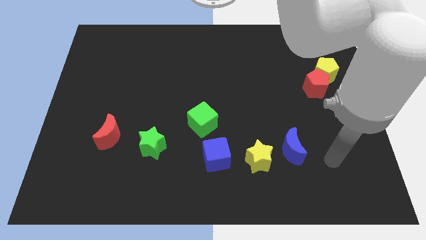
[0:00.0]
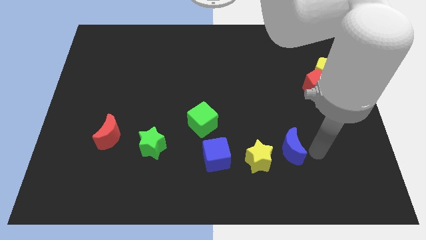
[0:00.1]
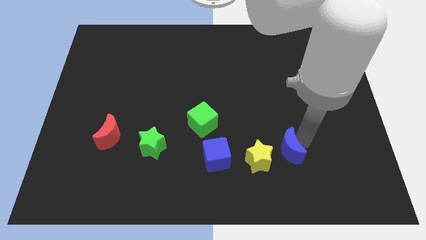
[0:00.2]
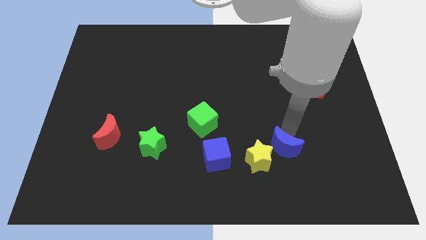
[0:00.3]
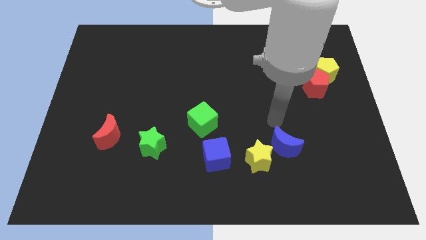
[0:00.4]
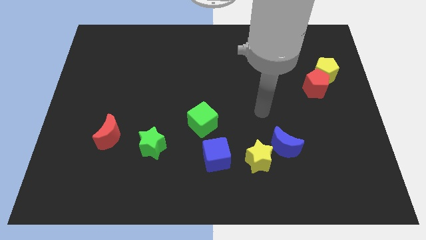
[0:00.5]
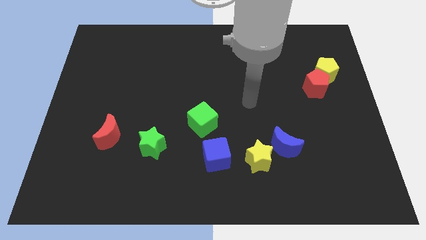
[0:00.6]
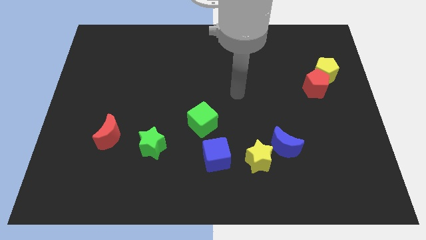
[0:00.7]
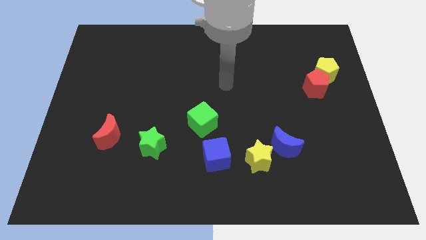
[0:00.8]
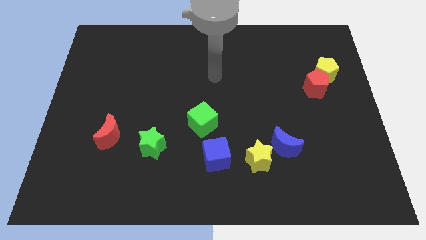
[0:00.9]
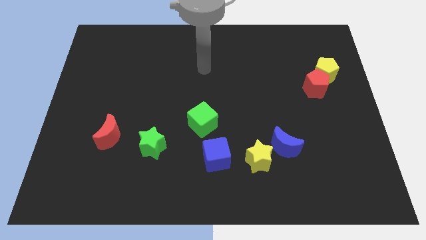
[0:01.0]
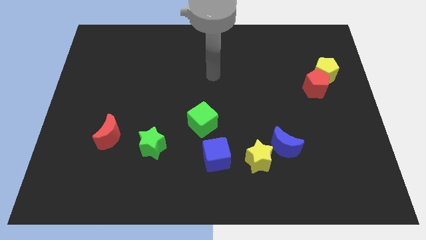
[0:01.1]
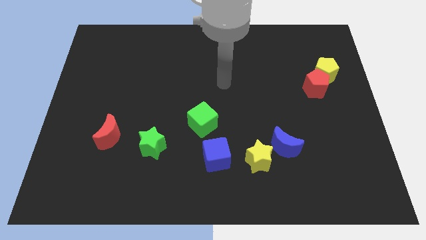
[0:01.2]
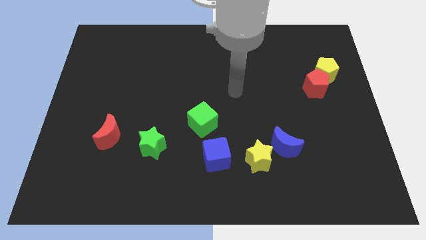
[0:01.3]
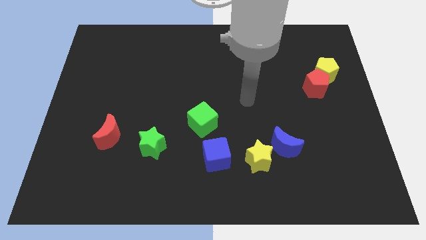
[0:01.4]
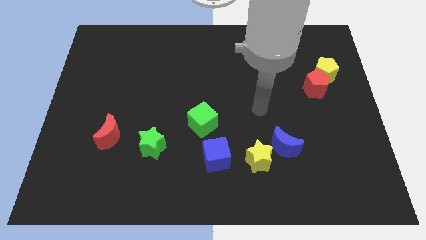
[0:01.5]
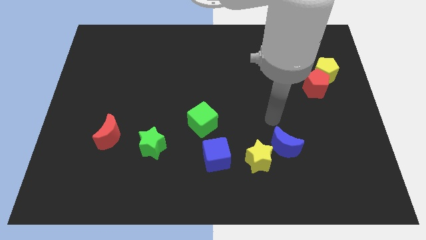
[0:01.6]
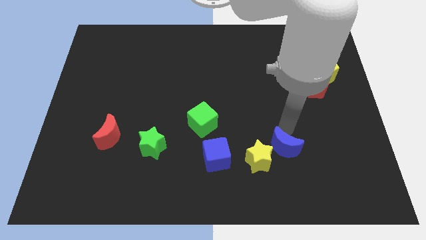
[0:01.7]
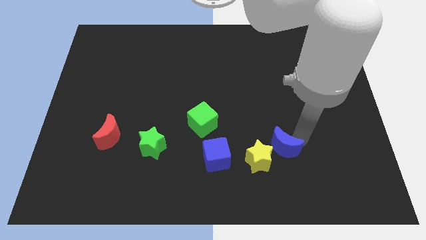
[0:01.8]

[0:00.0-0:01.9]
place your arm closer to the blue crescent

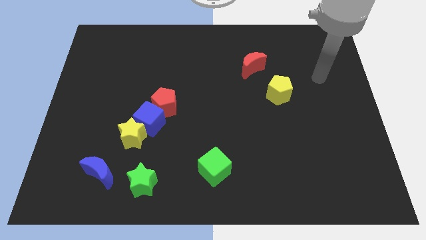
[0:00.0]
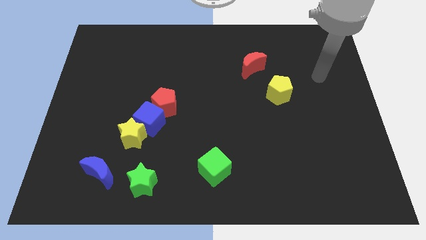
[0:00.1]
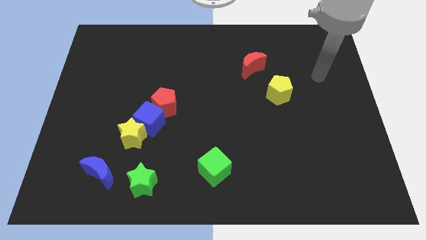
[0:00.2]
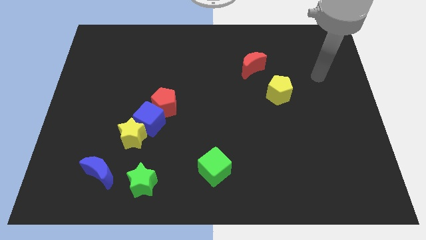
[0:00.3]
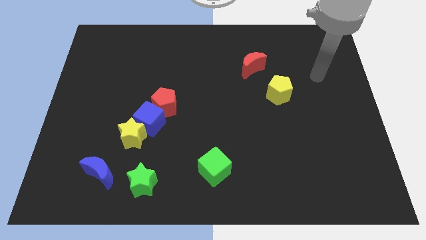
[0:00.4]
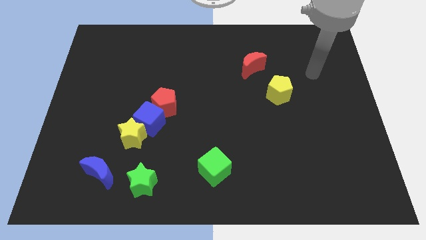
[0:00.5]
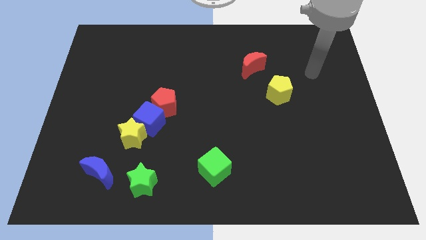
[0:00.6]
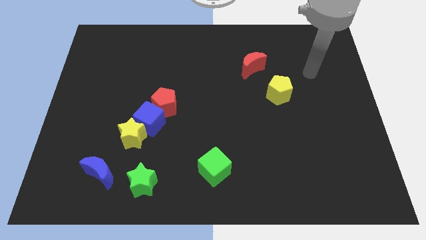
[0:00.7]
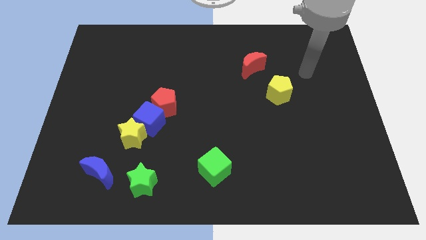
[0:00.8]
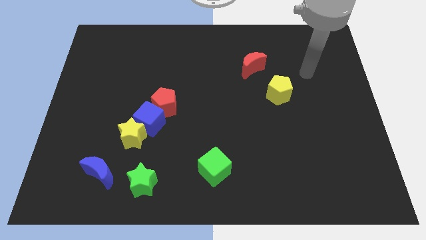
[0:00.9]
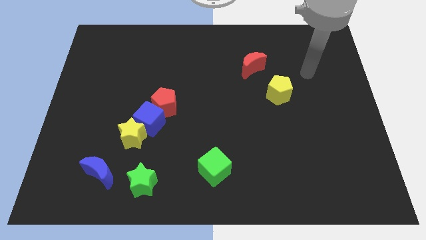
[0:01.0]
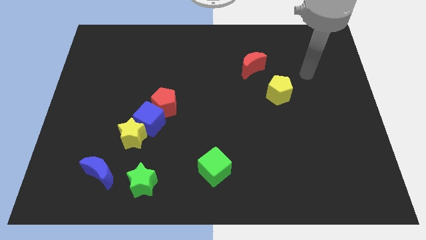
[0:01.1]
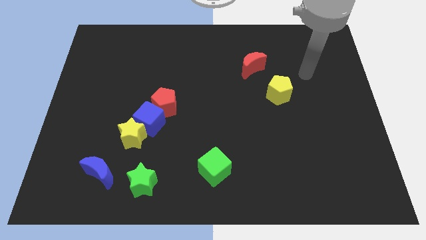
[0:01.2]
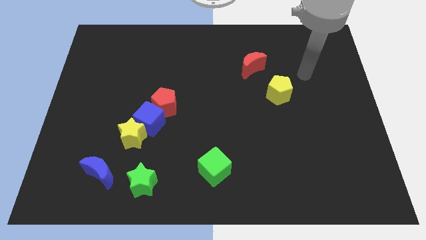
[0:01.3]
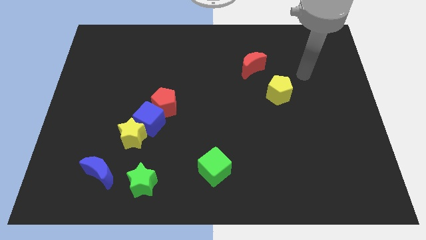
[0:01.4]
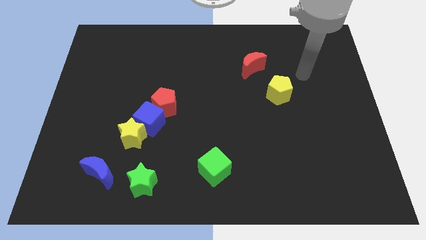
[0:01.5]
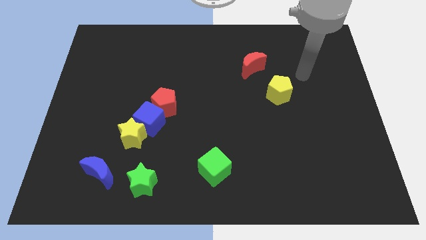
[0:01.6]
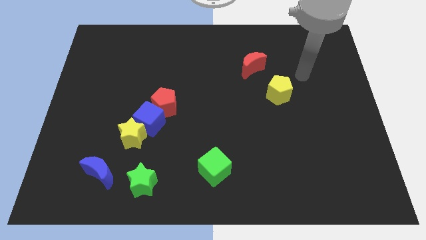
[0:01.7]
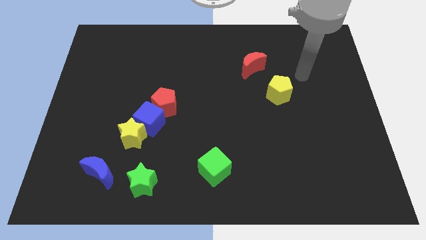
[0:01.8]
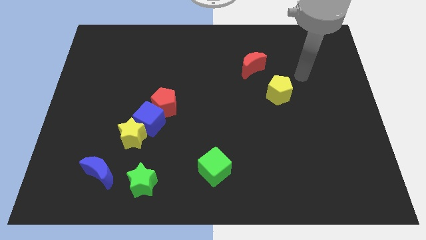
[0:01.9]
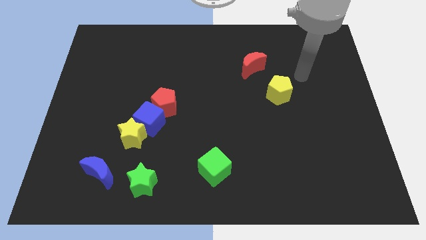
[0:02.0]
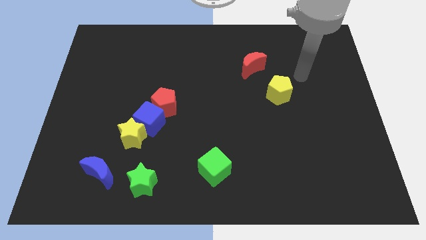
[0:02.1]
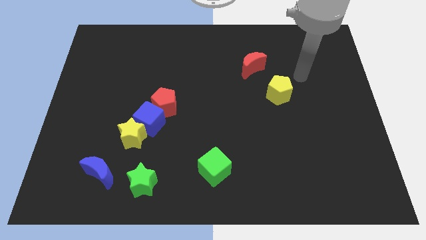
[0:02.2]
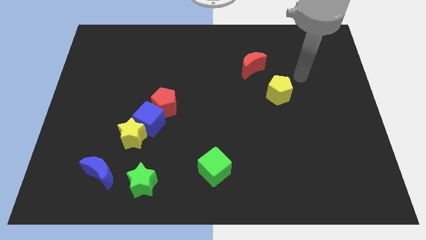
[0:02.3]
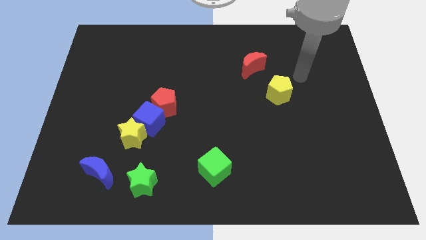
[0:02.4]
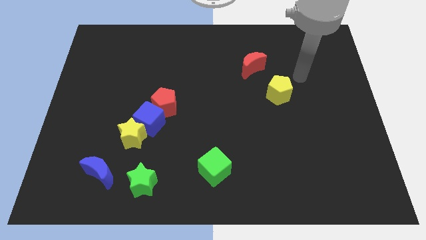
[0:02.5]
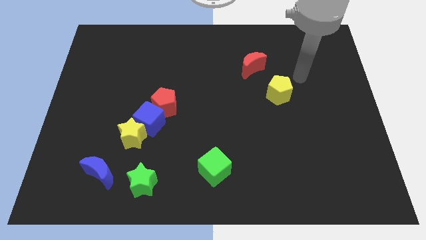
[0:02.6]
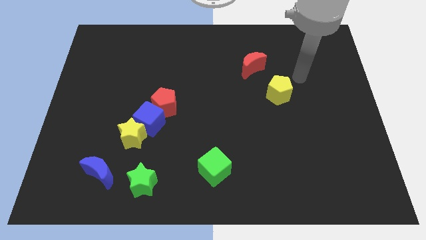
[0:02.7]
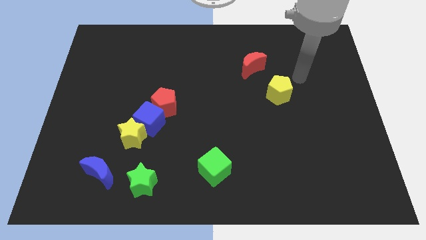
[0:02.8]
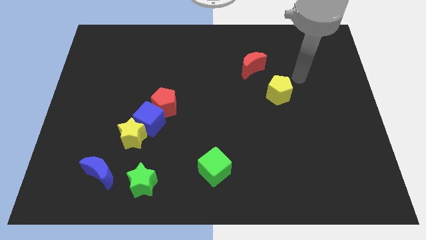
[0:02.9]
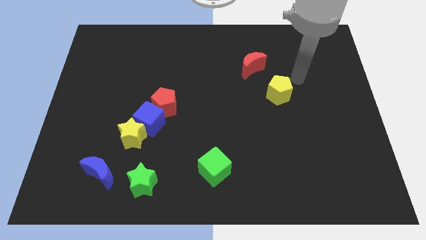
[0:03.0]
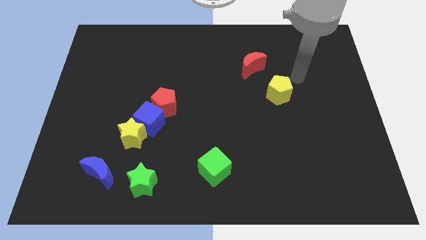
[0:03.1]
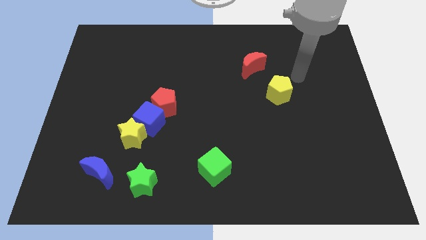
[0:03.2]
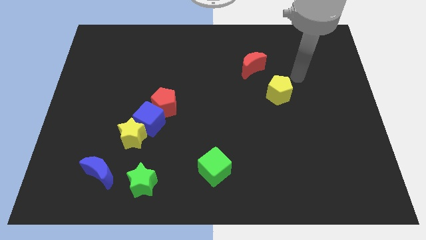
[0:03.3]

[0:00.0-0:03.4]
move arm to the right side of the yellow pentagon

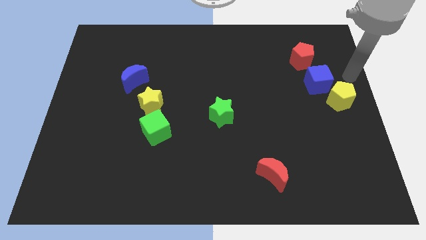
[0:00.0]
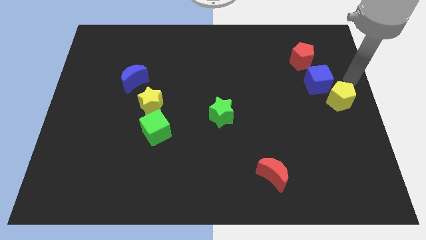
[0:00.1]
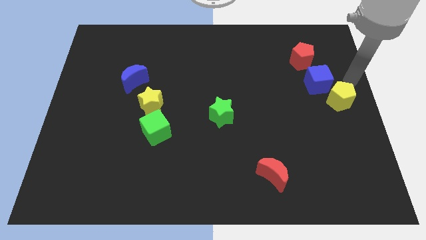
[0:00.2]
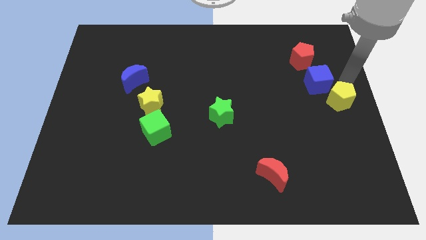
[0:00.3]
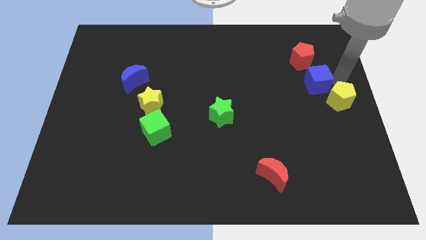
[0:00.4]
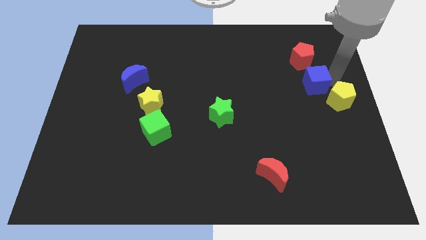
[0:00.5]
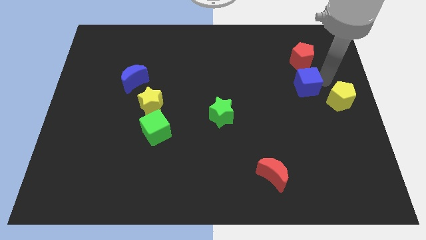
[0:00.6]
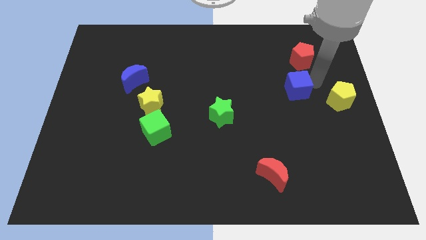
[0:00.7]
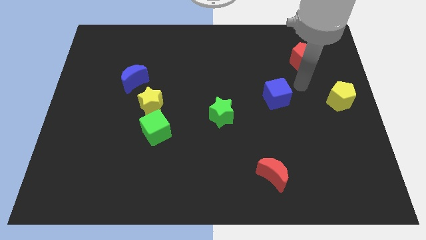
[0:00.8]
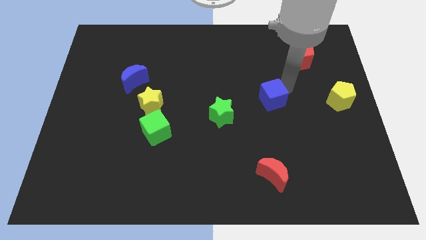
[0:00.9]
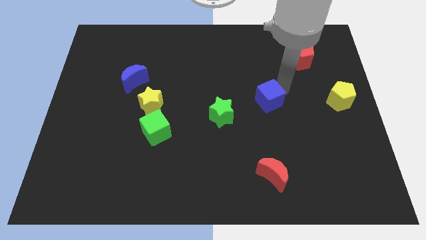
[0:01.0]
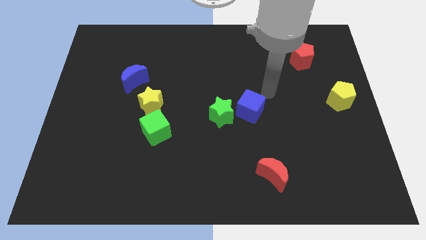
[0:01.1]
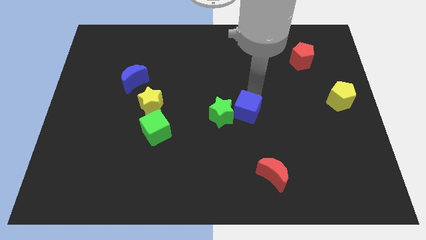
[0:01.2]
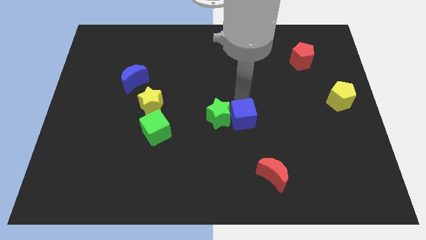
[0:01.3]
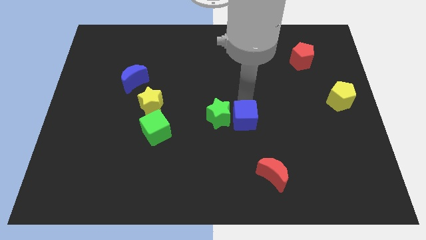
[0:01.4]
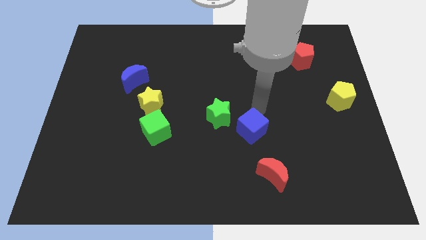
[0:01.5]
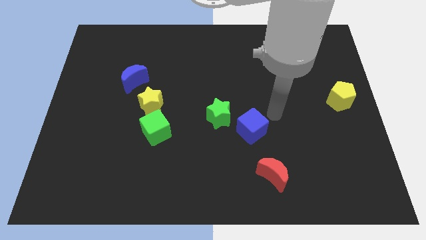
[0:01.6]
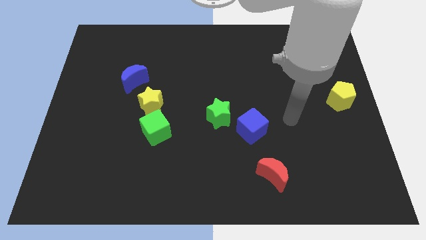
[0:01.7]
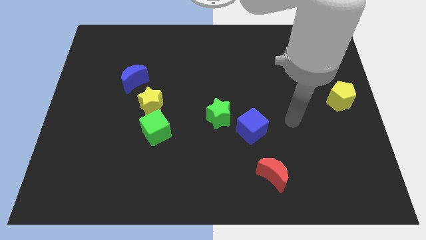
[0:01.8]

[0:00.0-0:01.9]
move the blue cube to the right of the green star

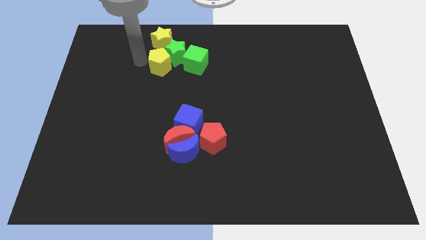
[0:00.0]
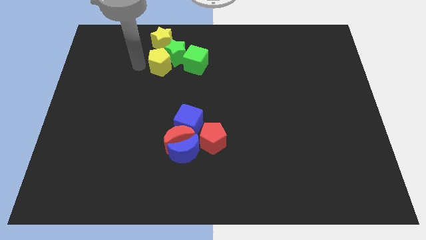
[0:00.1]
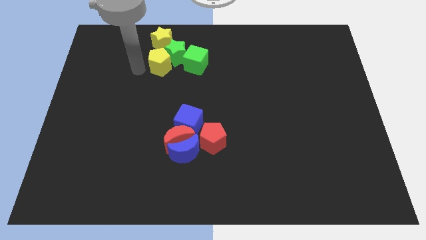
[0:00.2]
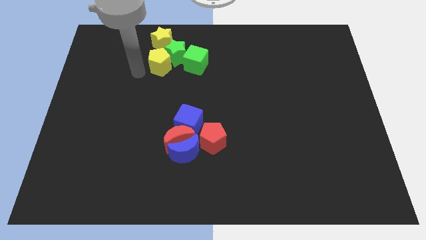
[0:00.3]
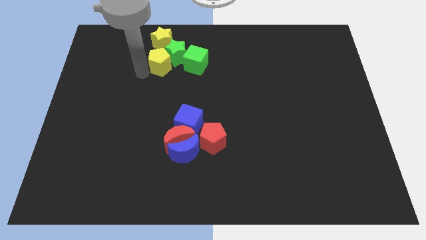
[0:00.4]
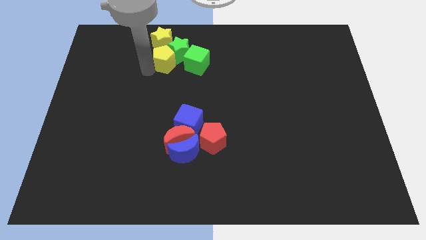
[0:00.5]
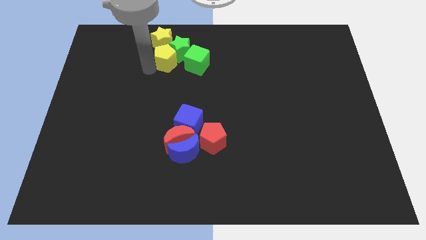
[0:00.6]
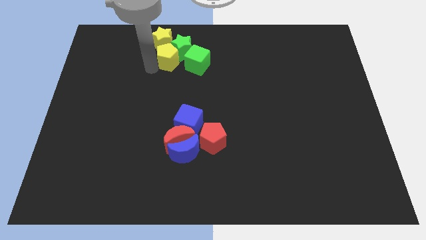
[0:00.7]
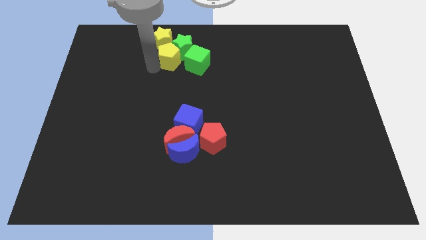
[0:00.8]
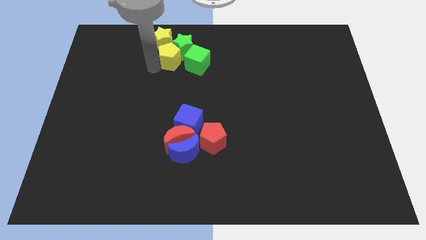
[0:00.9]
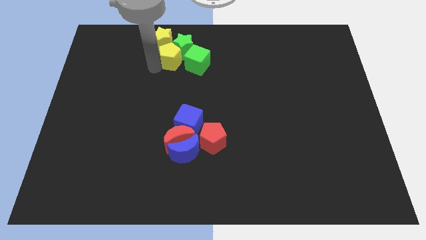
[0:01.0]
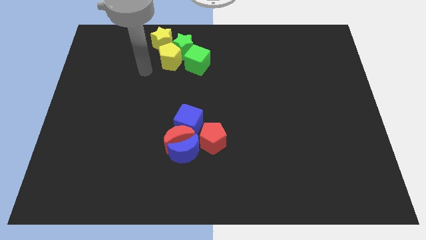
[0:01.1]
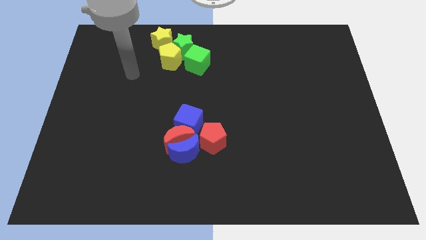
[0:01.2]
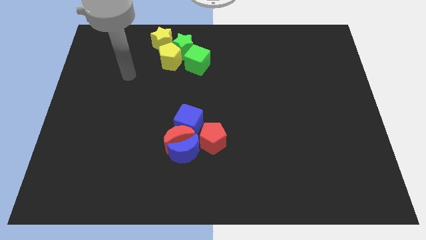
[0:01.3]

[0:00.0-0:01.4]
place the yellow pentagon below the yellow star

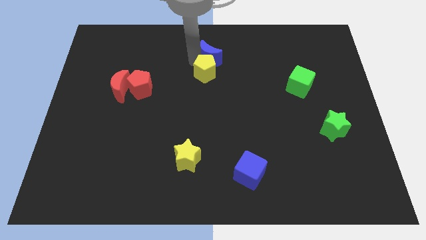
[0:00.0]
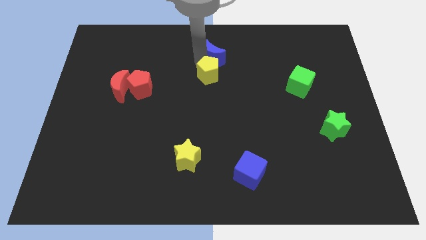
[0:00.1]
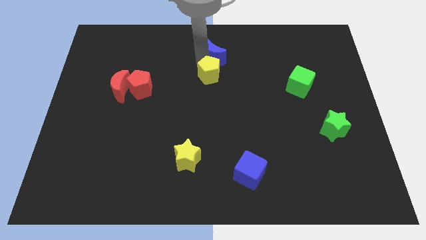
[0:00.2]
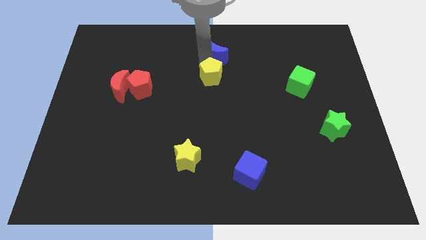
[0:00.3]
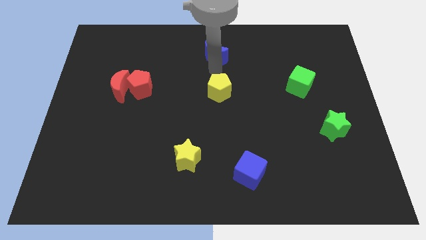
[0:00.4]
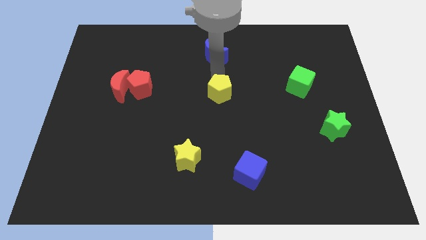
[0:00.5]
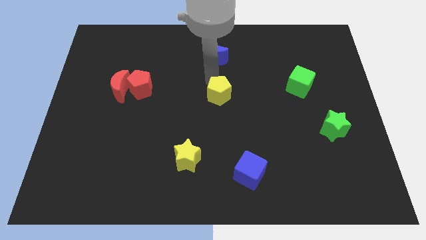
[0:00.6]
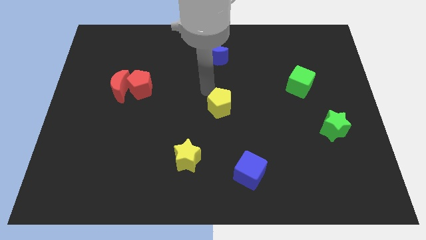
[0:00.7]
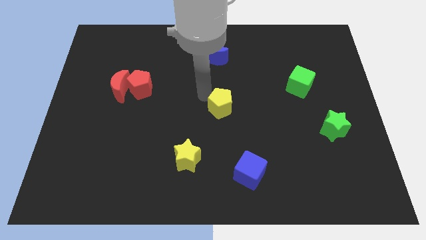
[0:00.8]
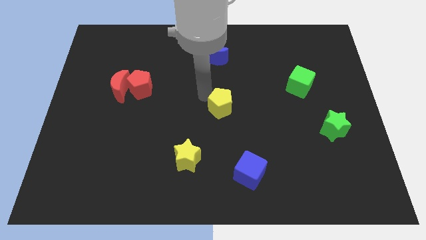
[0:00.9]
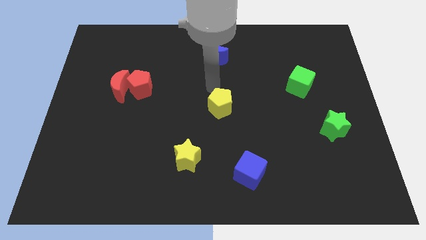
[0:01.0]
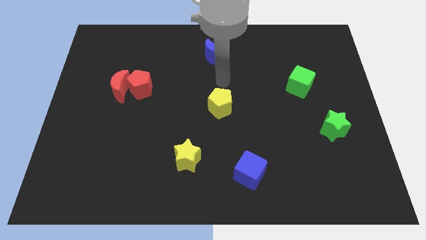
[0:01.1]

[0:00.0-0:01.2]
move the yellow pentagon towards the centre of the board
